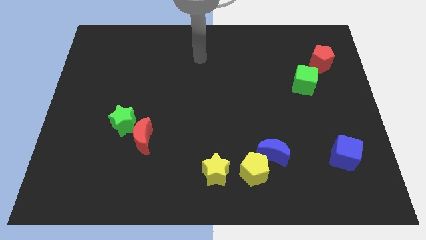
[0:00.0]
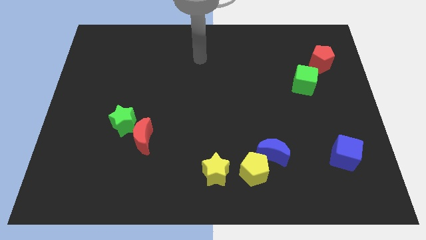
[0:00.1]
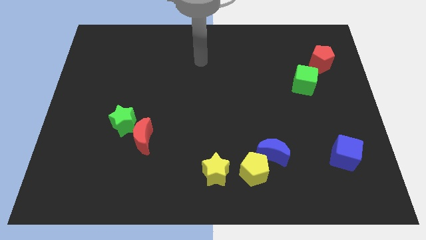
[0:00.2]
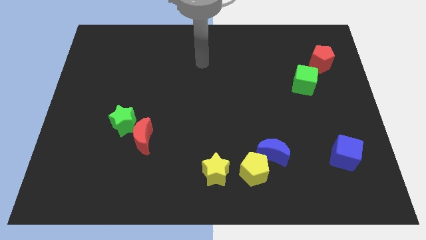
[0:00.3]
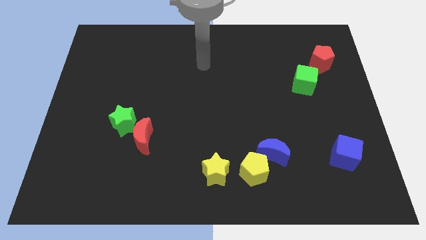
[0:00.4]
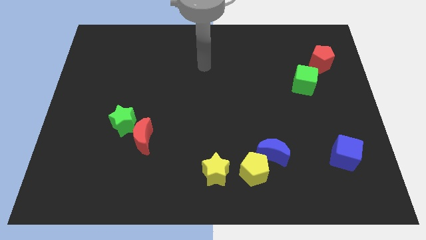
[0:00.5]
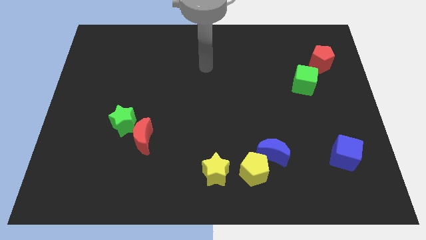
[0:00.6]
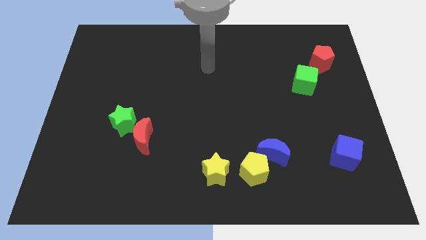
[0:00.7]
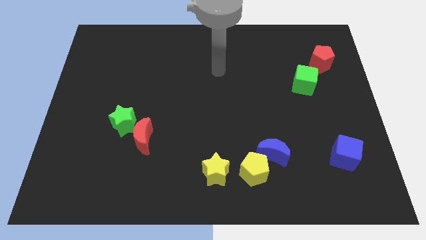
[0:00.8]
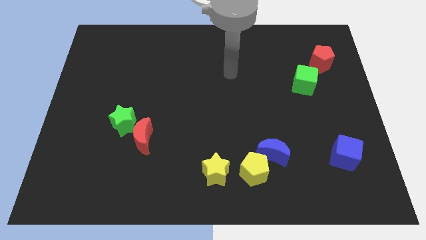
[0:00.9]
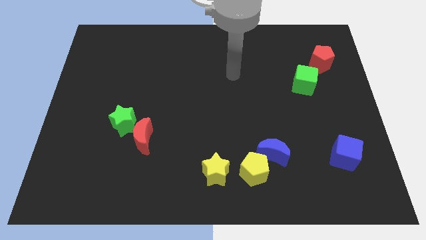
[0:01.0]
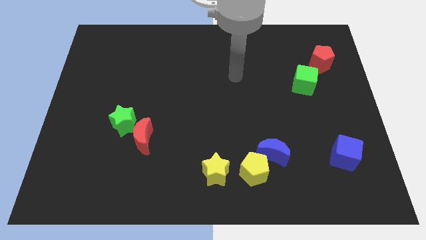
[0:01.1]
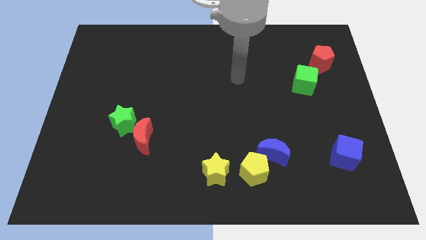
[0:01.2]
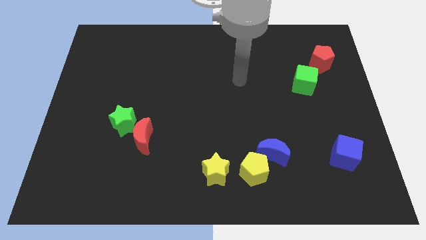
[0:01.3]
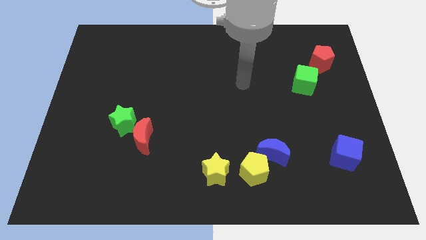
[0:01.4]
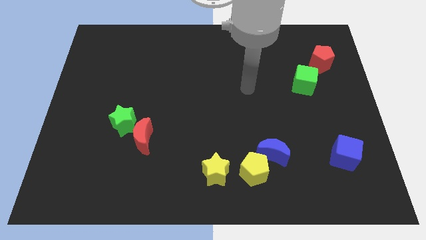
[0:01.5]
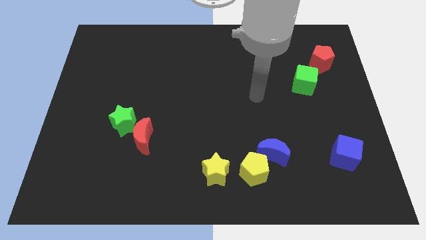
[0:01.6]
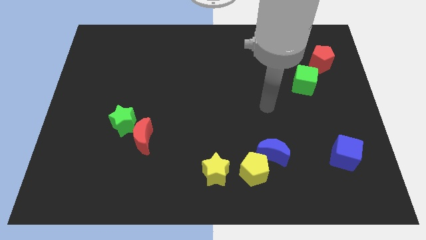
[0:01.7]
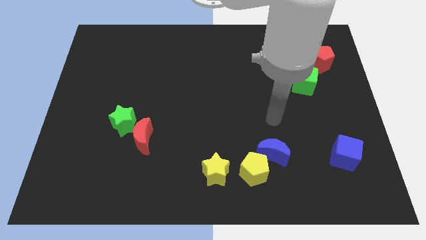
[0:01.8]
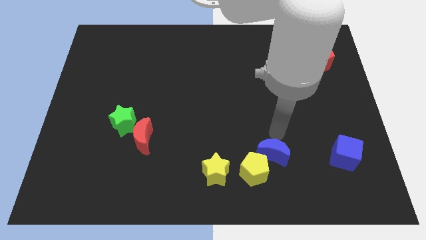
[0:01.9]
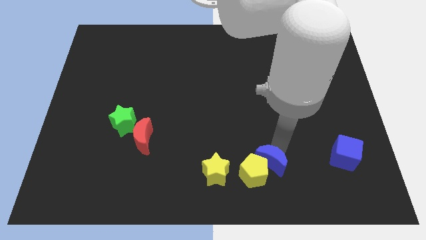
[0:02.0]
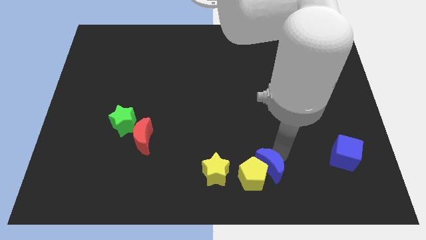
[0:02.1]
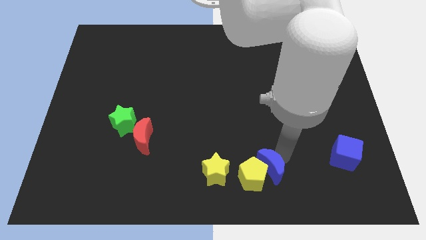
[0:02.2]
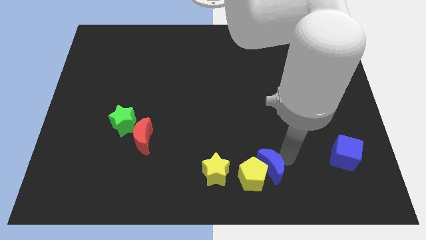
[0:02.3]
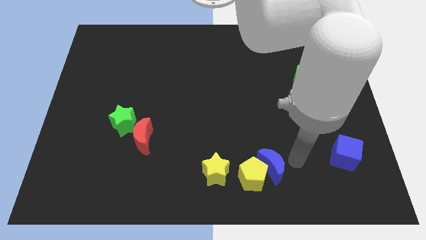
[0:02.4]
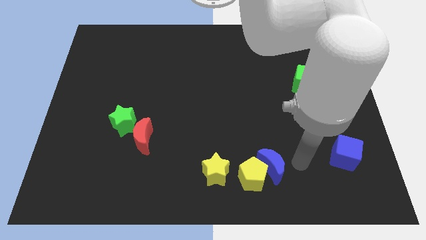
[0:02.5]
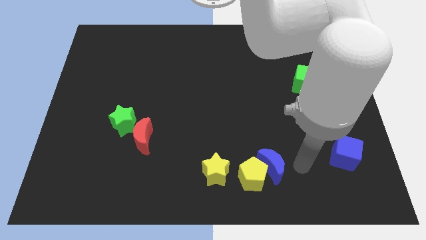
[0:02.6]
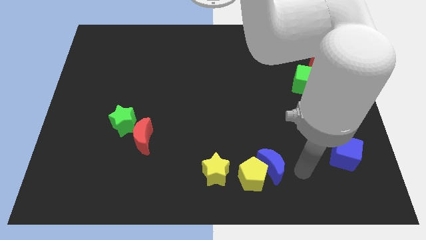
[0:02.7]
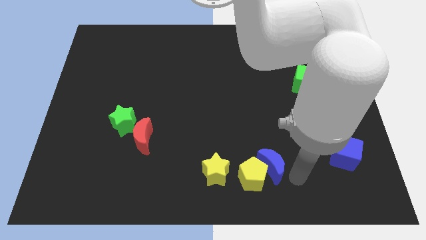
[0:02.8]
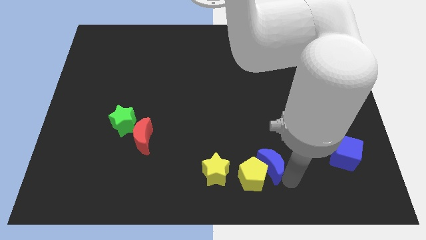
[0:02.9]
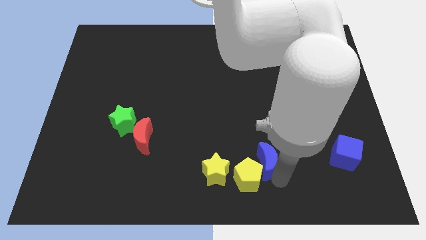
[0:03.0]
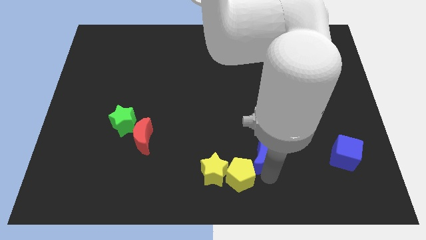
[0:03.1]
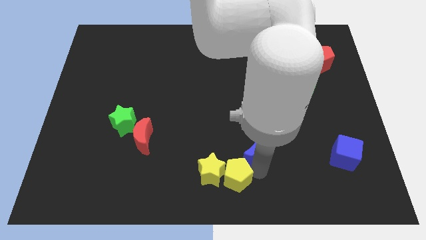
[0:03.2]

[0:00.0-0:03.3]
move the blue moon into the yellow pentagon

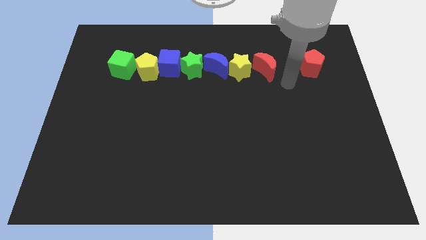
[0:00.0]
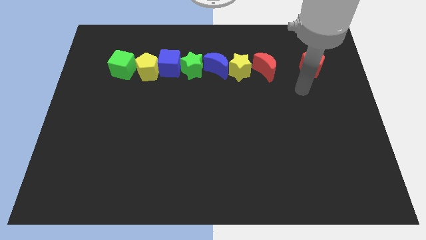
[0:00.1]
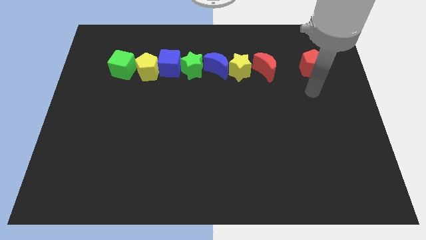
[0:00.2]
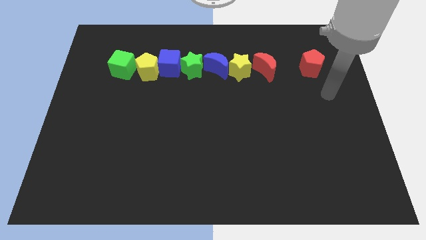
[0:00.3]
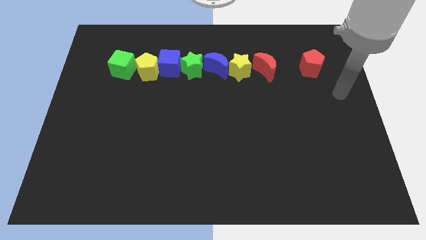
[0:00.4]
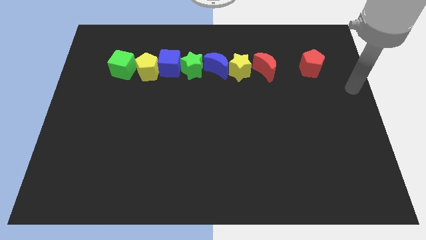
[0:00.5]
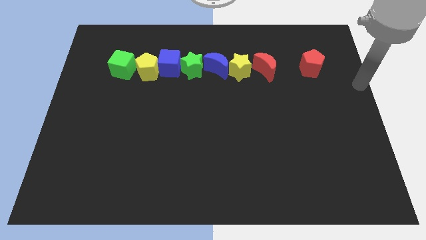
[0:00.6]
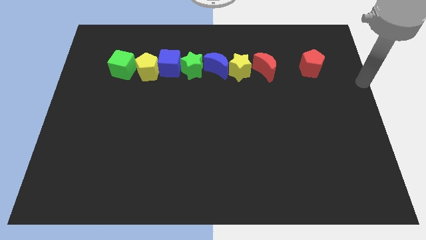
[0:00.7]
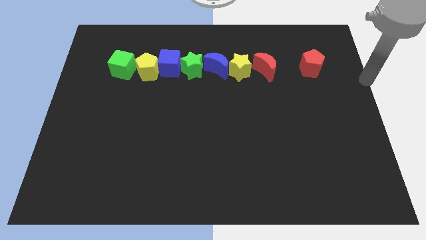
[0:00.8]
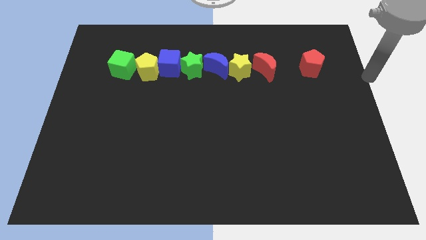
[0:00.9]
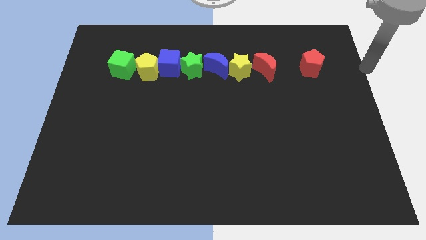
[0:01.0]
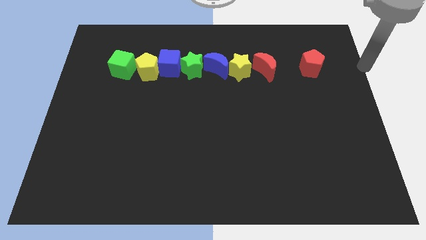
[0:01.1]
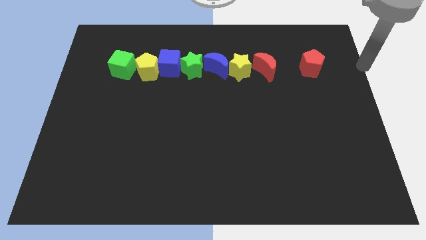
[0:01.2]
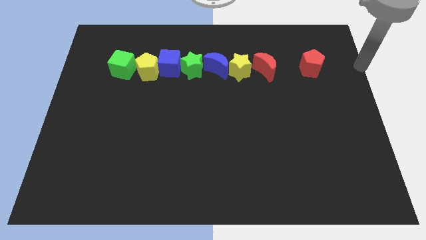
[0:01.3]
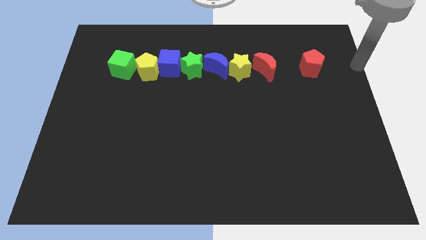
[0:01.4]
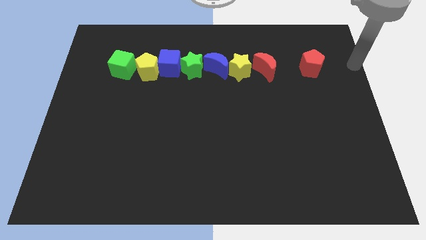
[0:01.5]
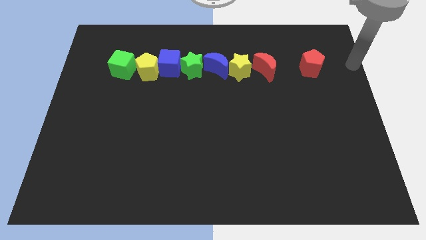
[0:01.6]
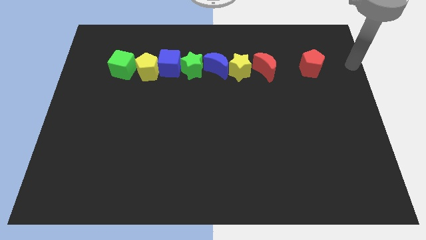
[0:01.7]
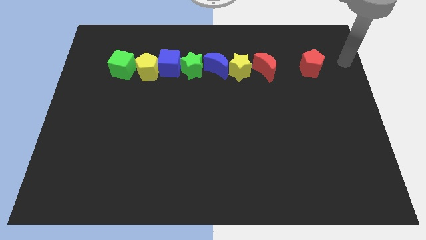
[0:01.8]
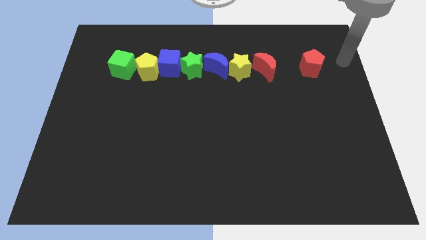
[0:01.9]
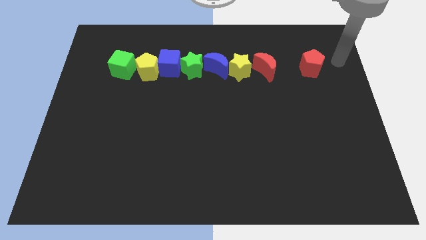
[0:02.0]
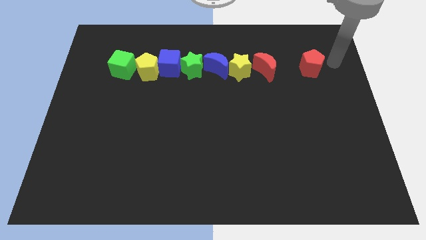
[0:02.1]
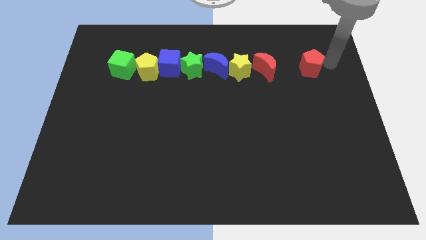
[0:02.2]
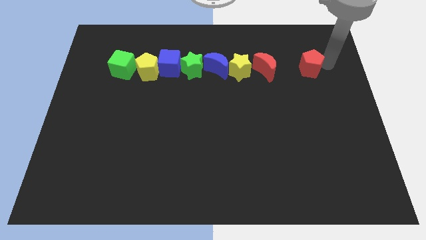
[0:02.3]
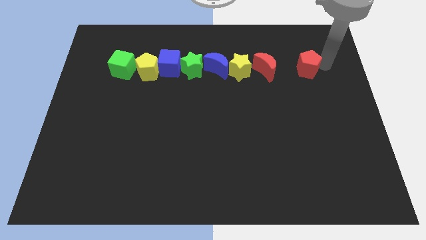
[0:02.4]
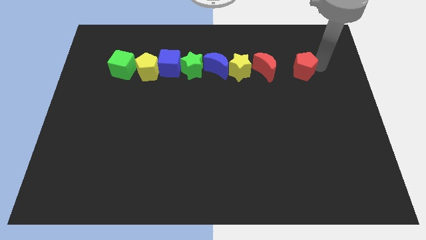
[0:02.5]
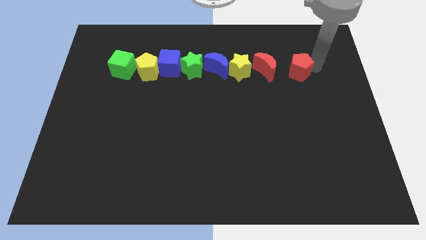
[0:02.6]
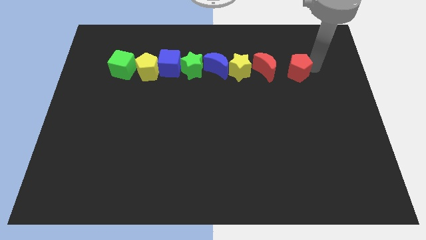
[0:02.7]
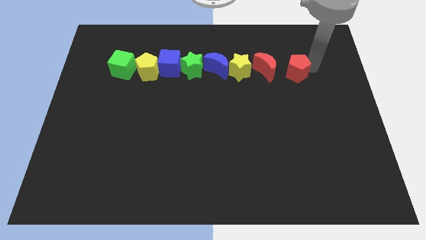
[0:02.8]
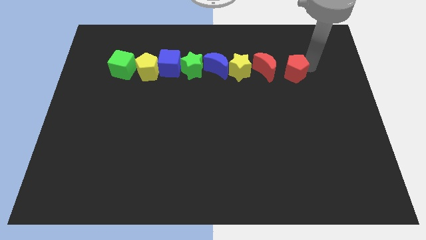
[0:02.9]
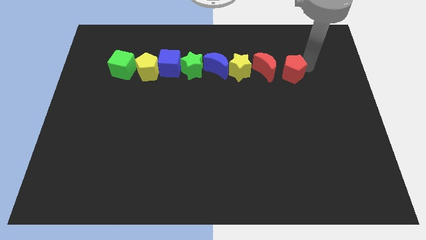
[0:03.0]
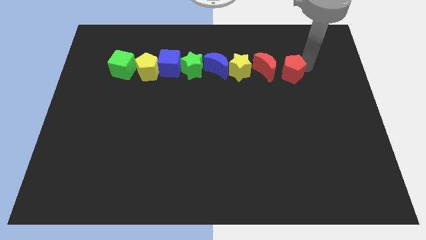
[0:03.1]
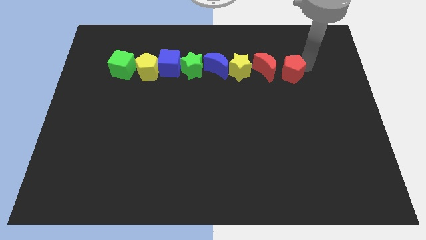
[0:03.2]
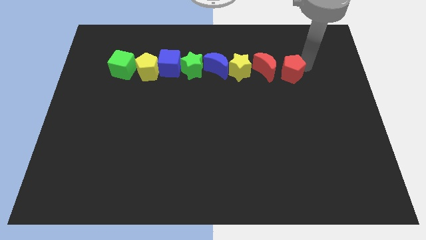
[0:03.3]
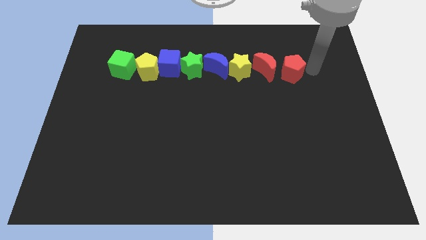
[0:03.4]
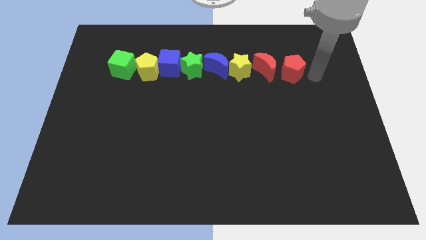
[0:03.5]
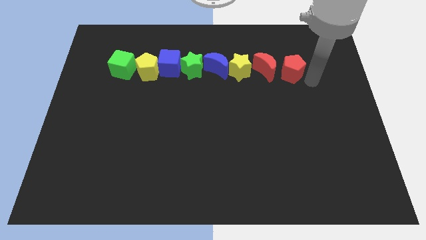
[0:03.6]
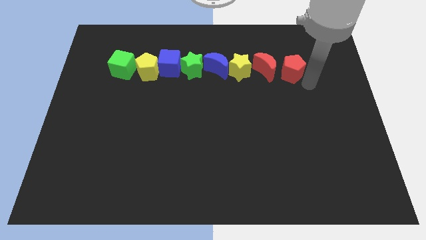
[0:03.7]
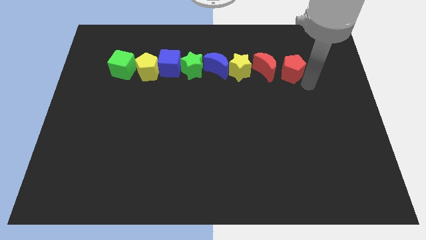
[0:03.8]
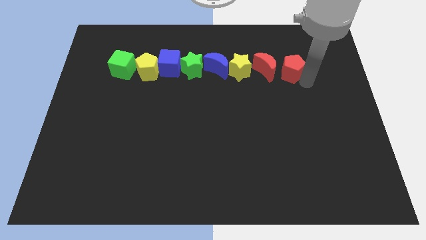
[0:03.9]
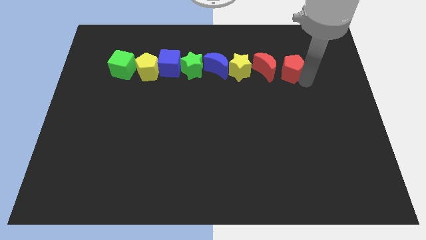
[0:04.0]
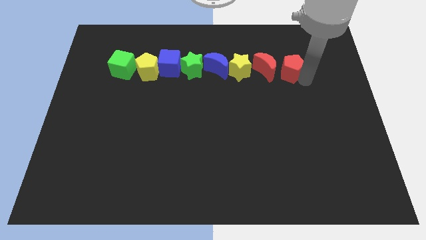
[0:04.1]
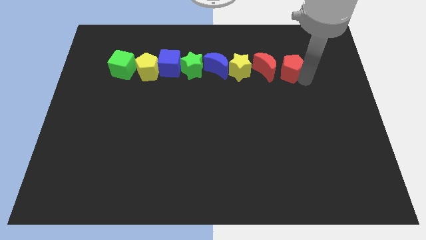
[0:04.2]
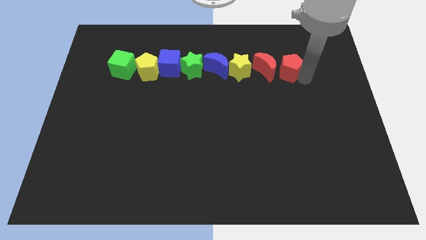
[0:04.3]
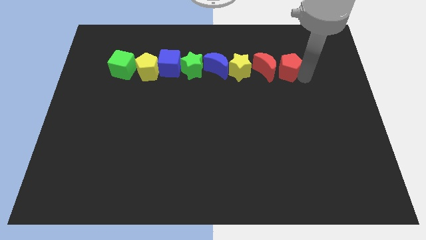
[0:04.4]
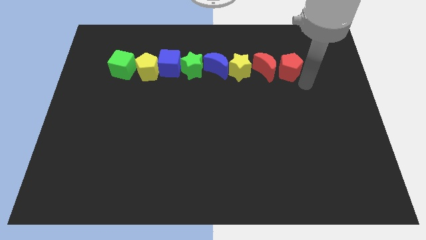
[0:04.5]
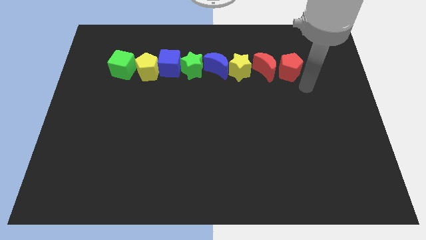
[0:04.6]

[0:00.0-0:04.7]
move the red pentagon close to the red moon

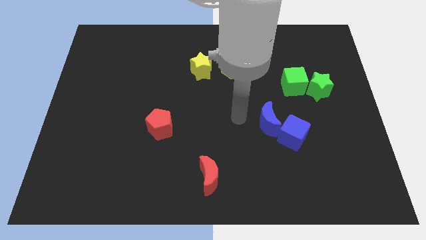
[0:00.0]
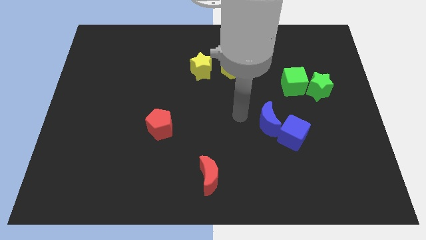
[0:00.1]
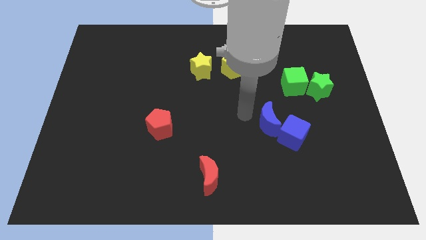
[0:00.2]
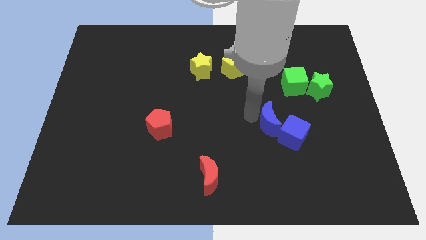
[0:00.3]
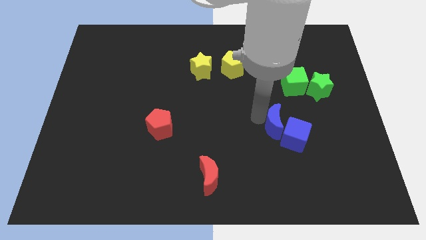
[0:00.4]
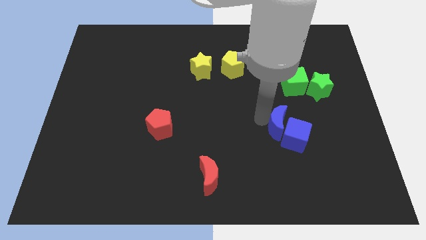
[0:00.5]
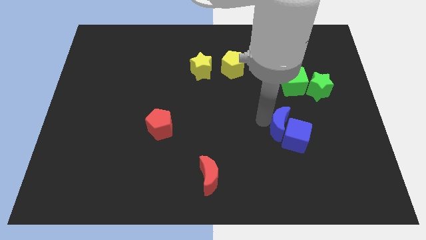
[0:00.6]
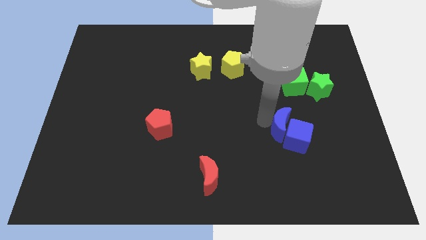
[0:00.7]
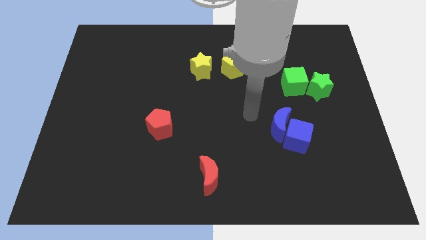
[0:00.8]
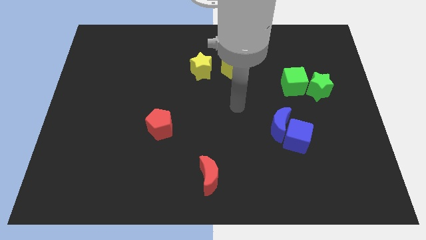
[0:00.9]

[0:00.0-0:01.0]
move blue moon into blue cube
